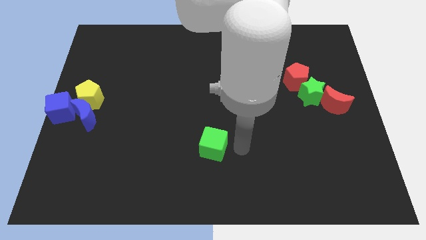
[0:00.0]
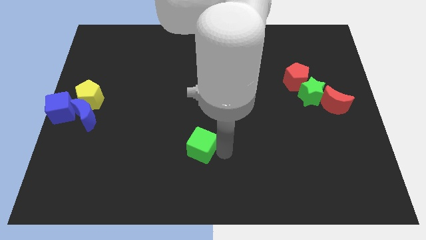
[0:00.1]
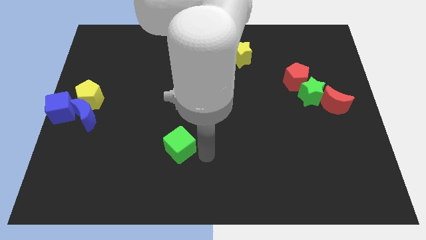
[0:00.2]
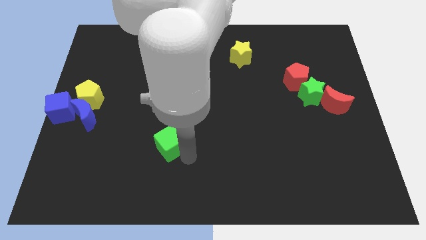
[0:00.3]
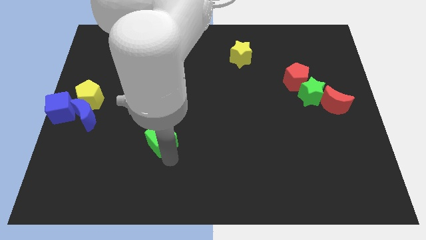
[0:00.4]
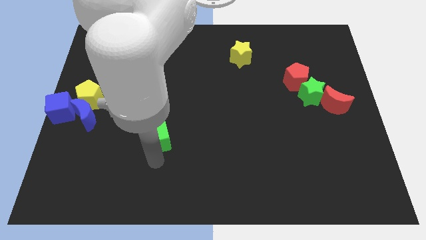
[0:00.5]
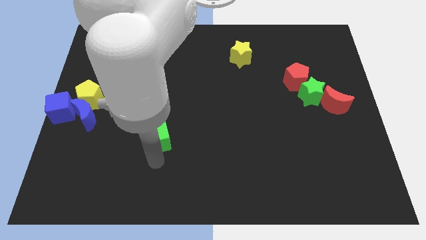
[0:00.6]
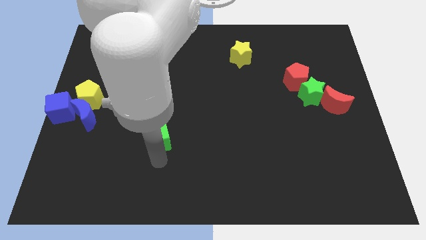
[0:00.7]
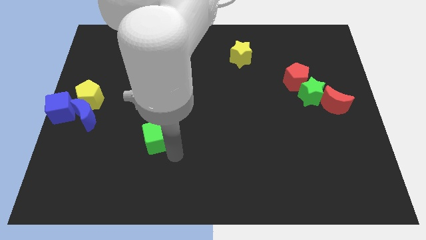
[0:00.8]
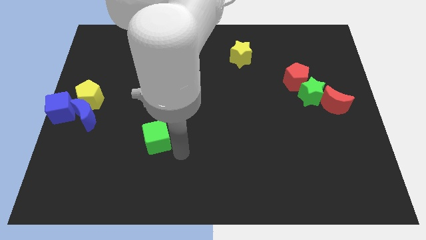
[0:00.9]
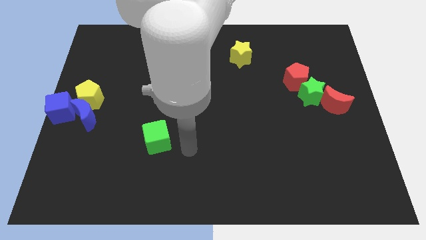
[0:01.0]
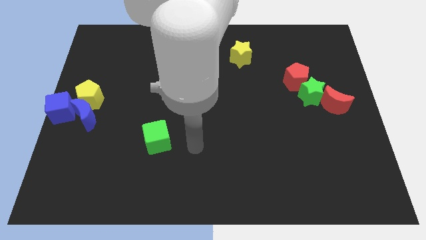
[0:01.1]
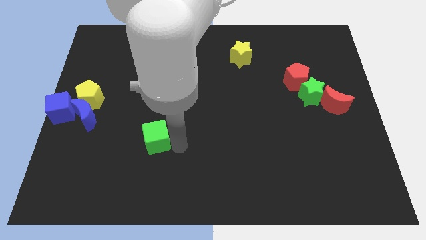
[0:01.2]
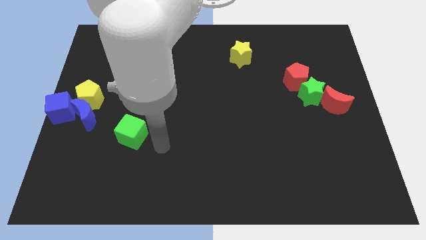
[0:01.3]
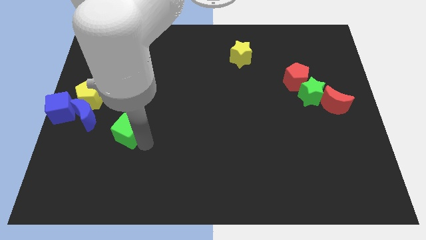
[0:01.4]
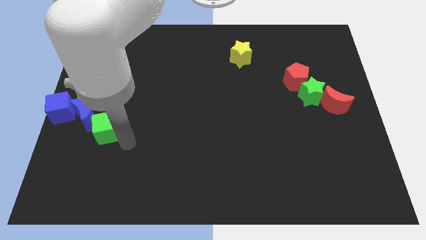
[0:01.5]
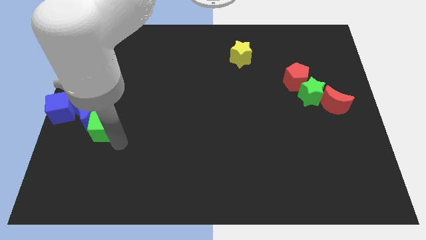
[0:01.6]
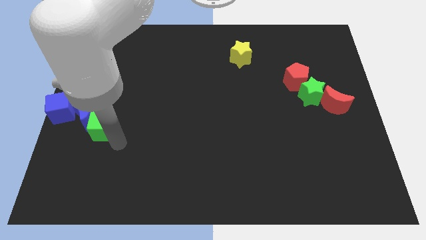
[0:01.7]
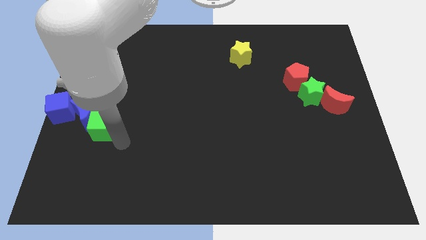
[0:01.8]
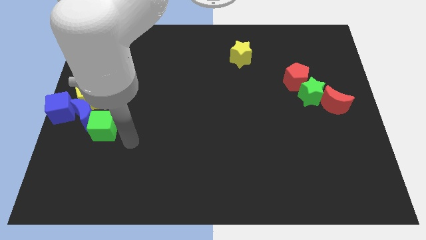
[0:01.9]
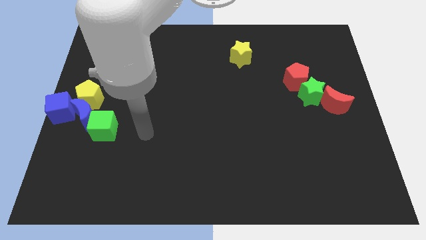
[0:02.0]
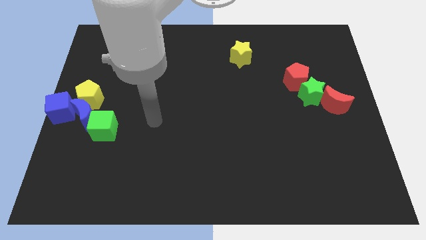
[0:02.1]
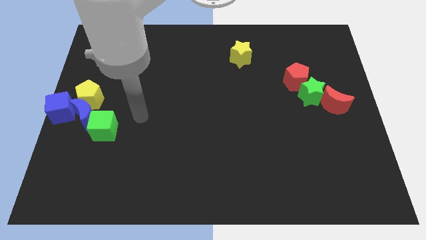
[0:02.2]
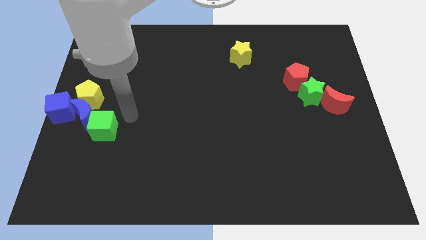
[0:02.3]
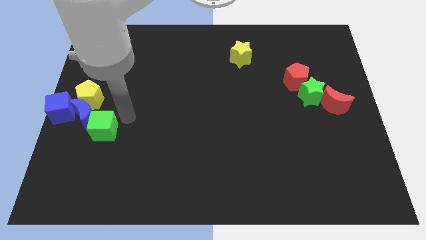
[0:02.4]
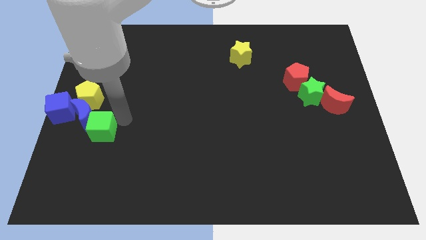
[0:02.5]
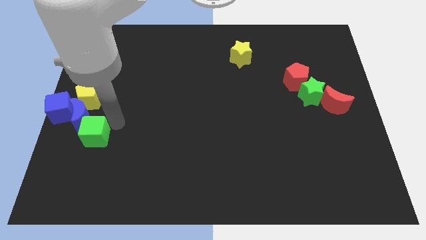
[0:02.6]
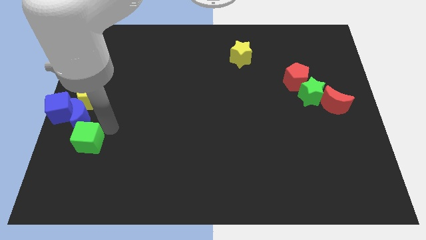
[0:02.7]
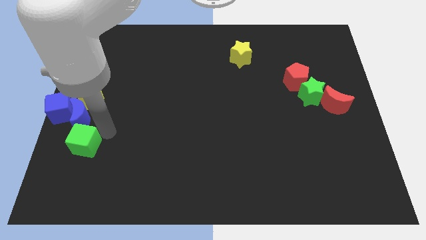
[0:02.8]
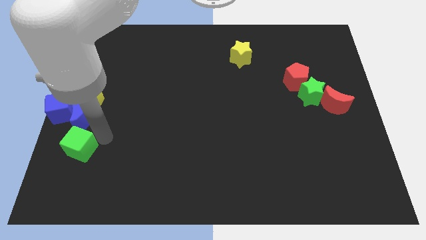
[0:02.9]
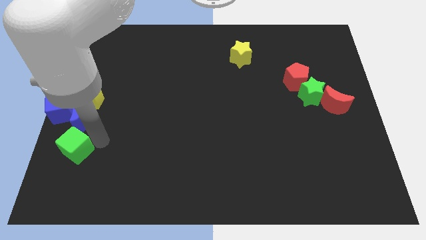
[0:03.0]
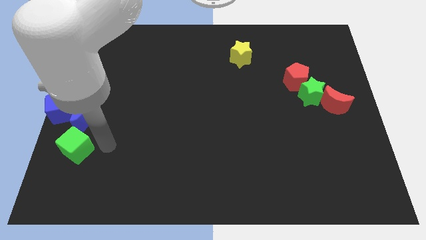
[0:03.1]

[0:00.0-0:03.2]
put the green cube to the bottom side of the blue crescent

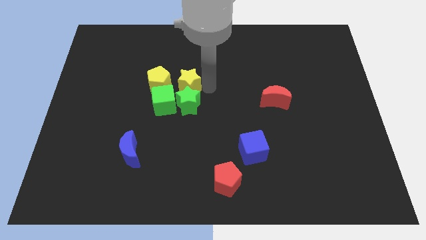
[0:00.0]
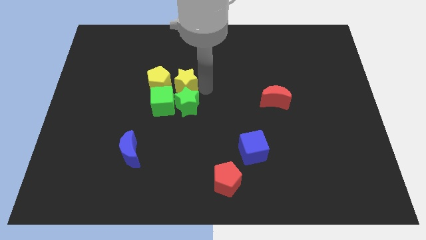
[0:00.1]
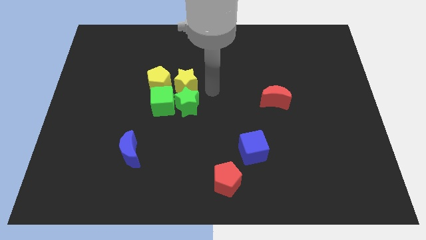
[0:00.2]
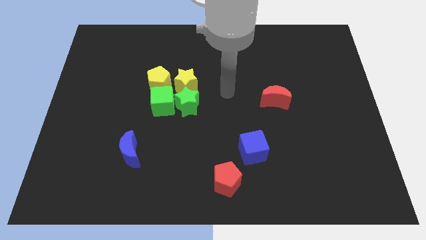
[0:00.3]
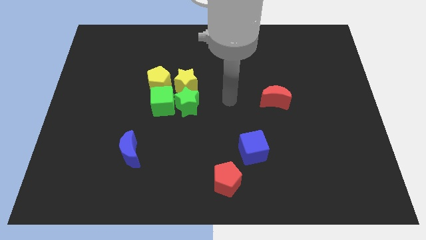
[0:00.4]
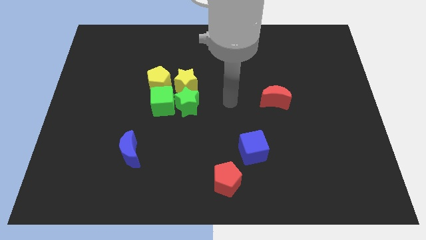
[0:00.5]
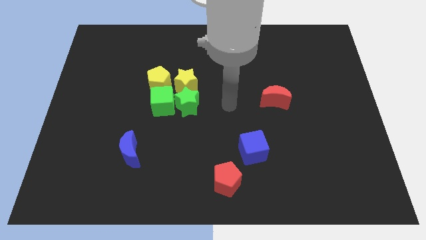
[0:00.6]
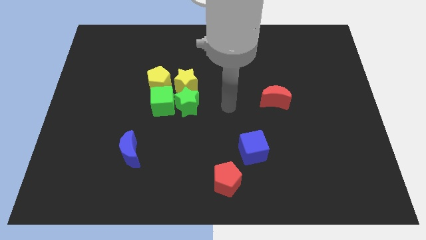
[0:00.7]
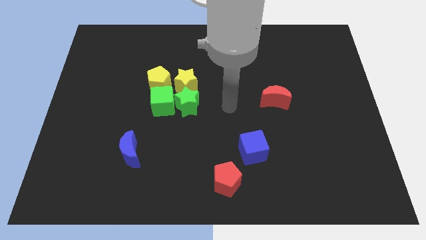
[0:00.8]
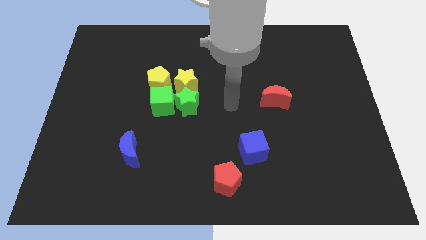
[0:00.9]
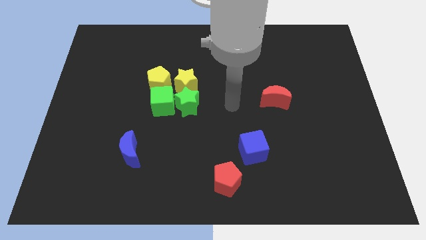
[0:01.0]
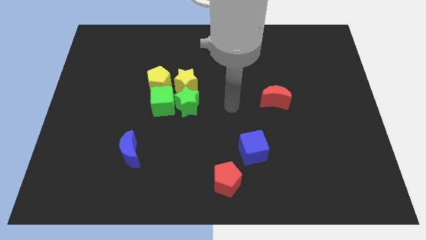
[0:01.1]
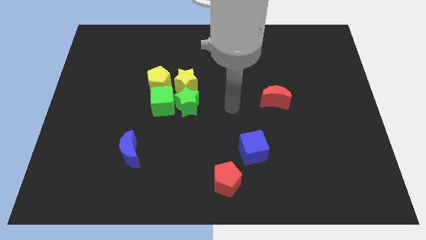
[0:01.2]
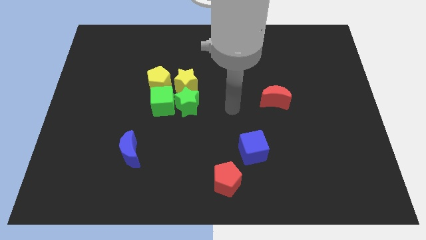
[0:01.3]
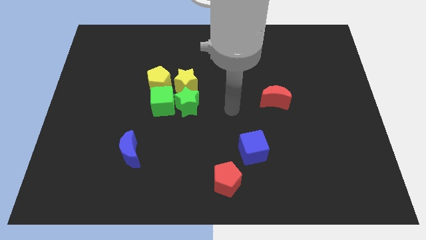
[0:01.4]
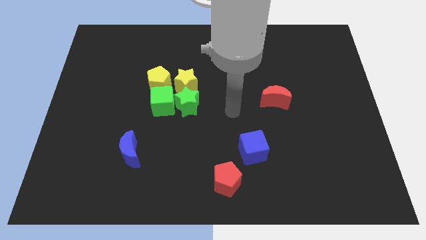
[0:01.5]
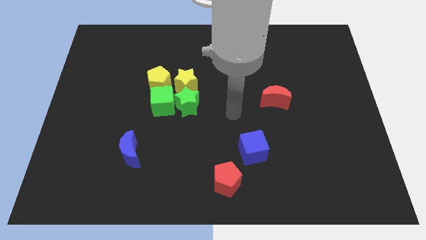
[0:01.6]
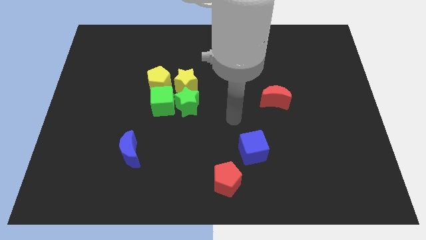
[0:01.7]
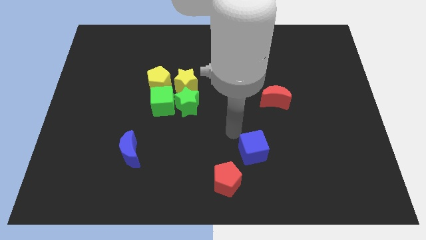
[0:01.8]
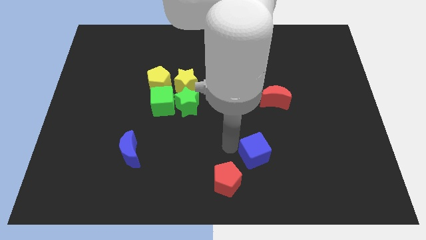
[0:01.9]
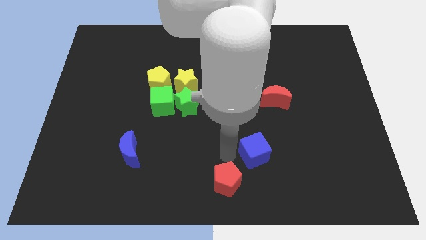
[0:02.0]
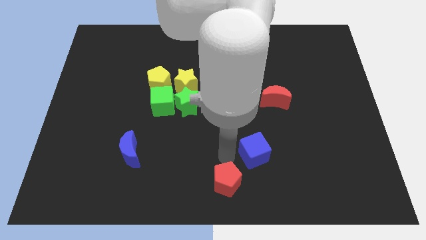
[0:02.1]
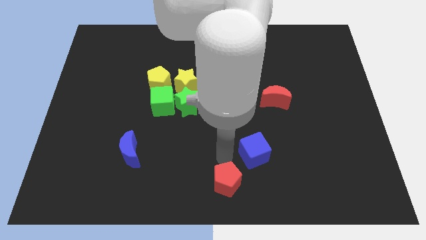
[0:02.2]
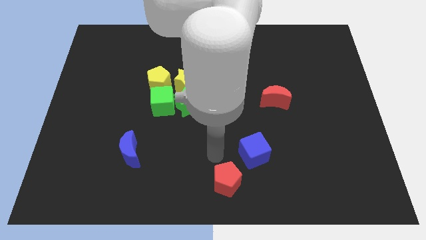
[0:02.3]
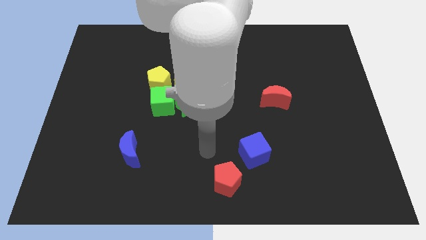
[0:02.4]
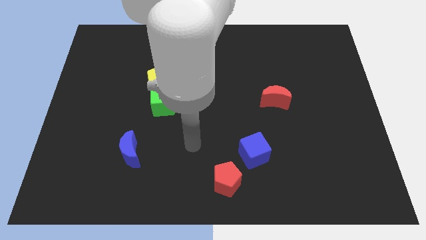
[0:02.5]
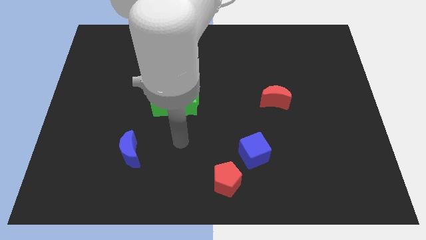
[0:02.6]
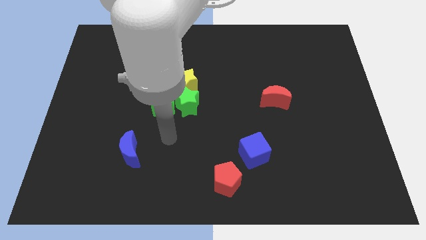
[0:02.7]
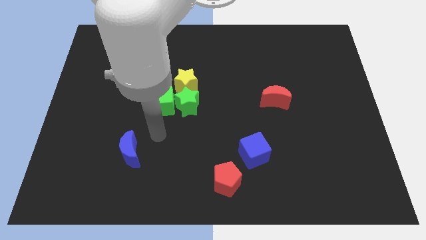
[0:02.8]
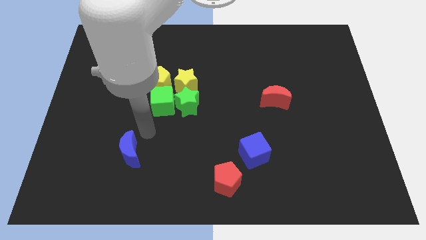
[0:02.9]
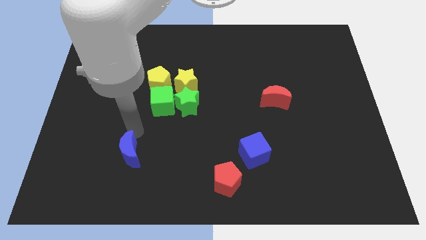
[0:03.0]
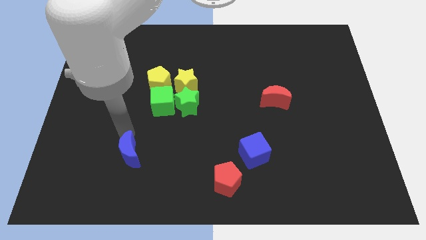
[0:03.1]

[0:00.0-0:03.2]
move your arm to the top of blue moon

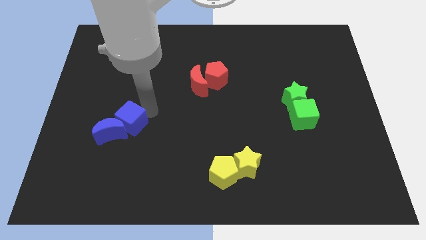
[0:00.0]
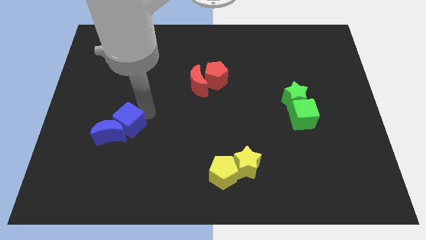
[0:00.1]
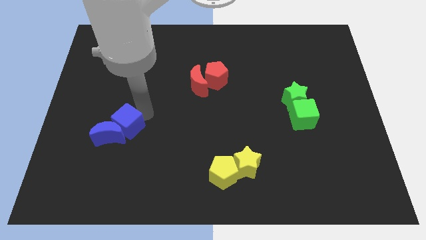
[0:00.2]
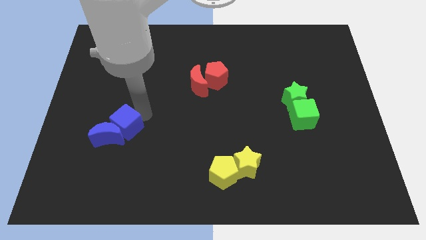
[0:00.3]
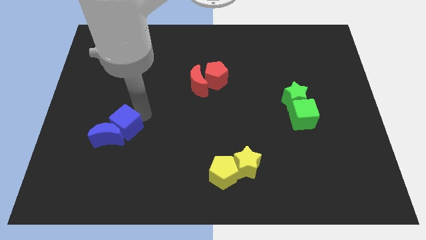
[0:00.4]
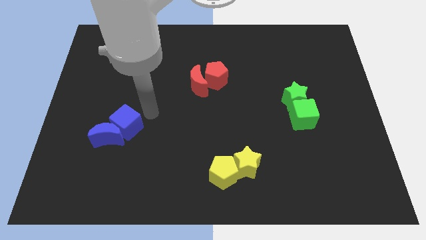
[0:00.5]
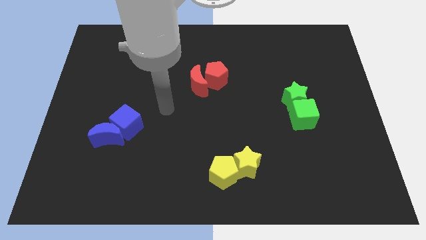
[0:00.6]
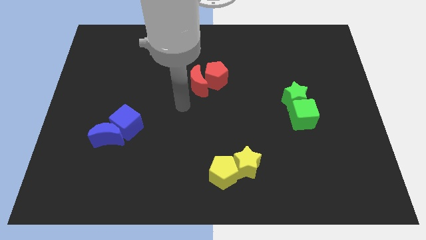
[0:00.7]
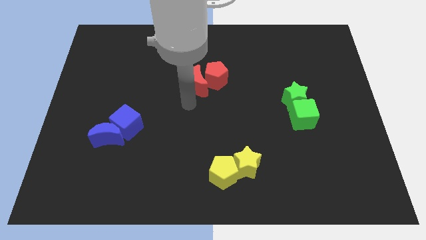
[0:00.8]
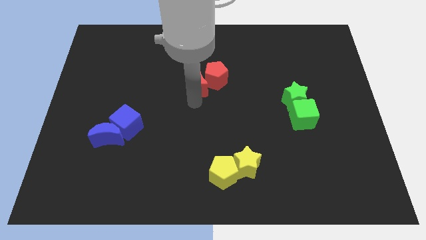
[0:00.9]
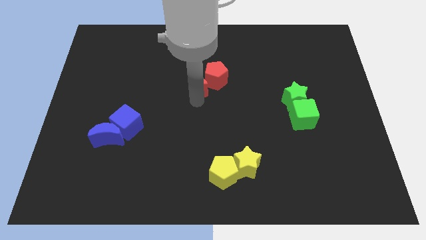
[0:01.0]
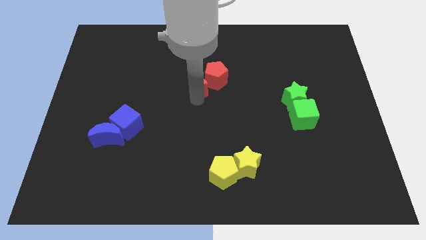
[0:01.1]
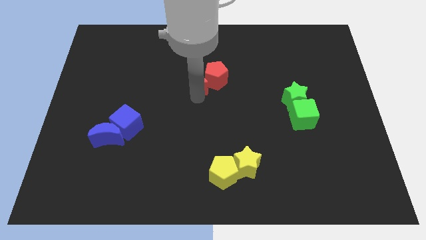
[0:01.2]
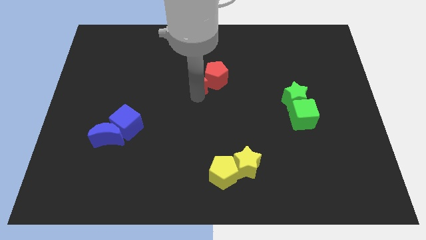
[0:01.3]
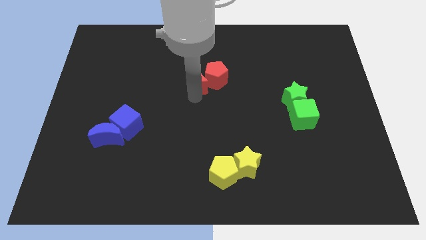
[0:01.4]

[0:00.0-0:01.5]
slightly push the red crescent

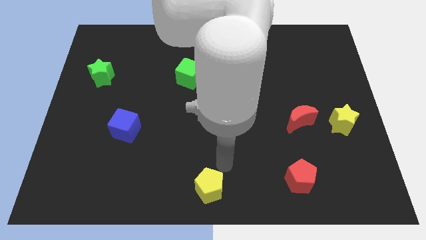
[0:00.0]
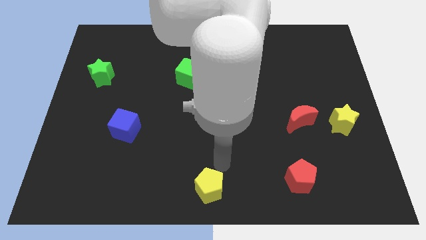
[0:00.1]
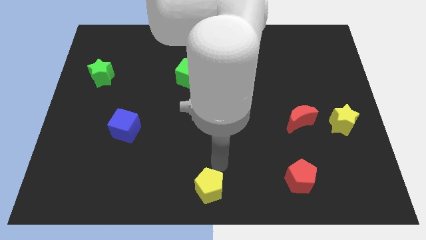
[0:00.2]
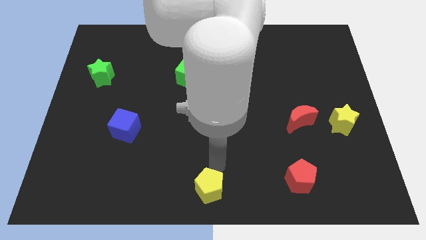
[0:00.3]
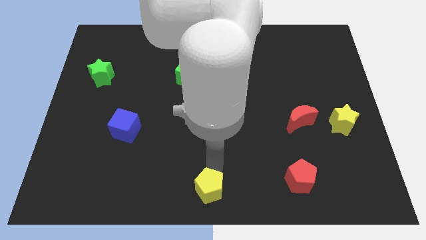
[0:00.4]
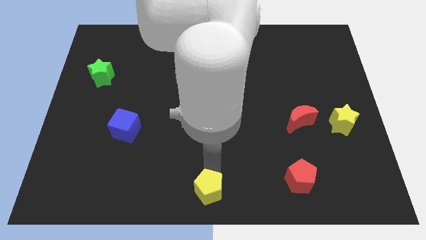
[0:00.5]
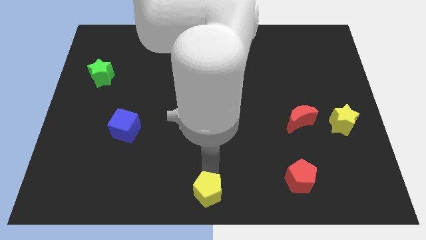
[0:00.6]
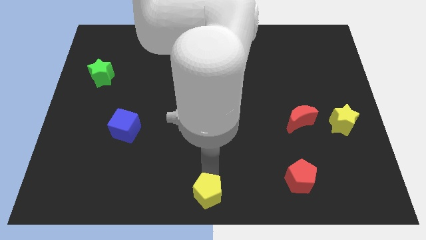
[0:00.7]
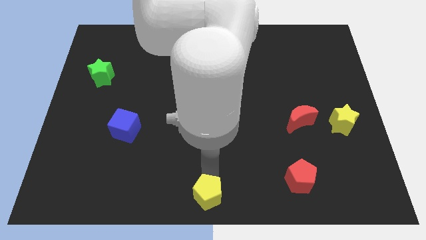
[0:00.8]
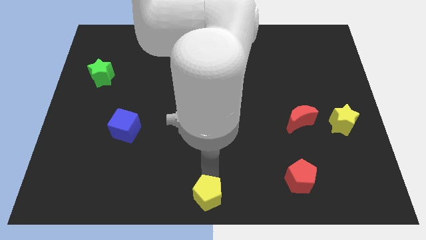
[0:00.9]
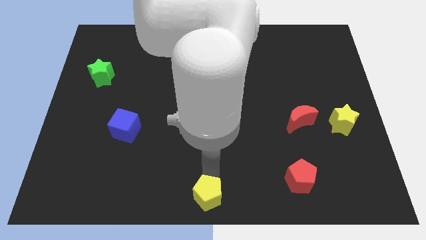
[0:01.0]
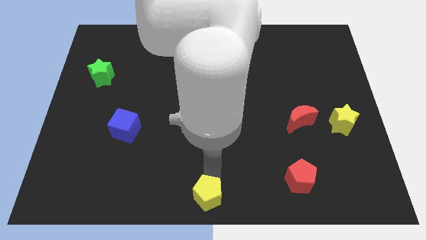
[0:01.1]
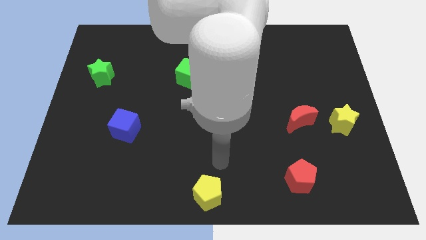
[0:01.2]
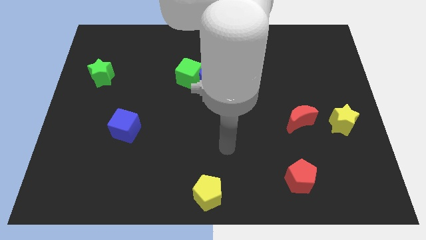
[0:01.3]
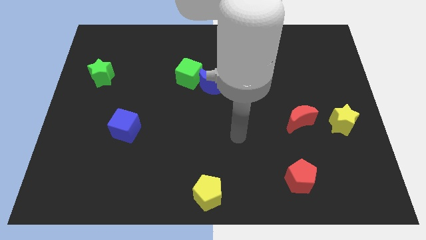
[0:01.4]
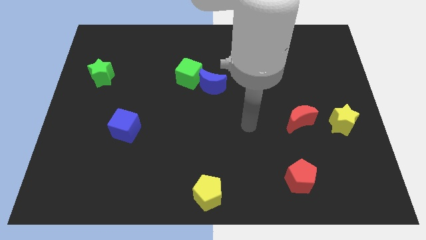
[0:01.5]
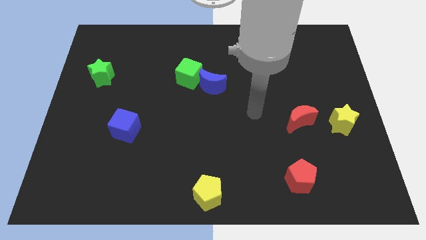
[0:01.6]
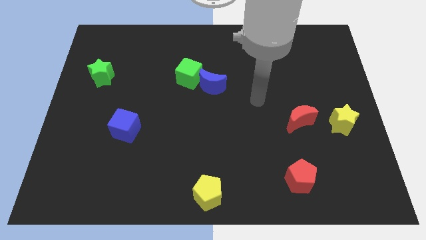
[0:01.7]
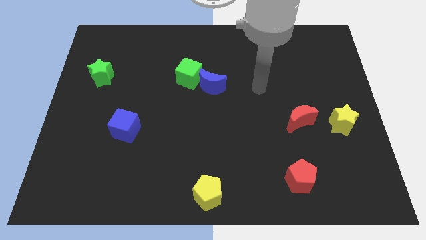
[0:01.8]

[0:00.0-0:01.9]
move the yellow pentagon to the bottom center
